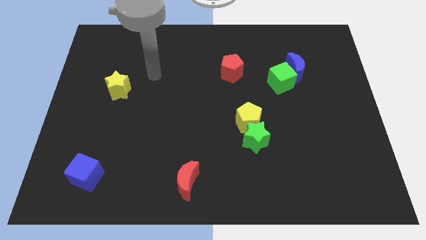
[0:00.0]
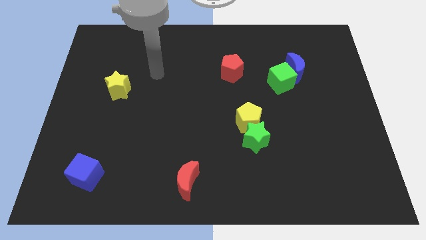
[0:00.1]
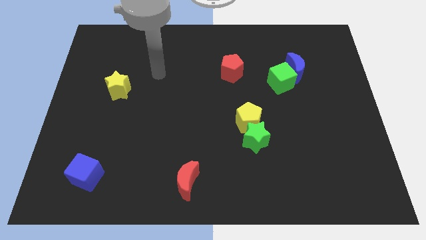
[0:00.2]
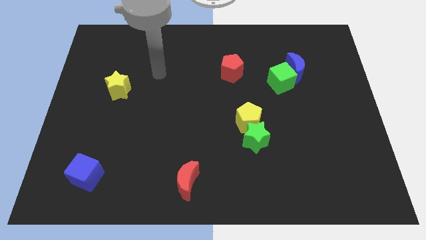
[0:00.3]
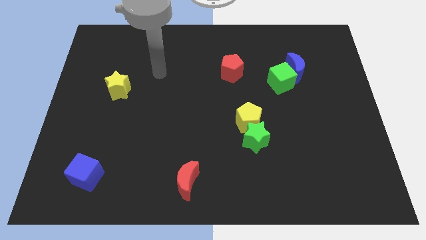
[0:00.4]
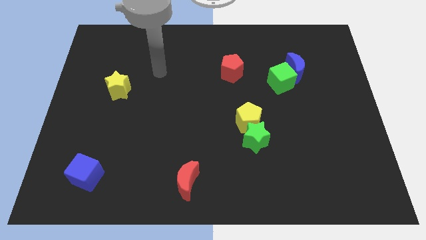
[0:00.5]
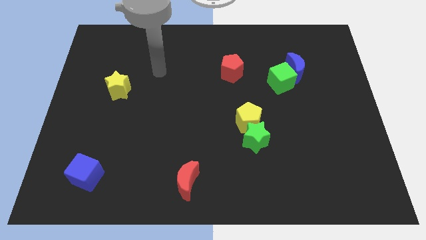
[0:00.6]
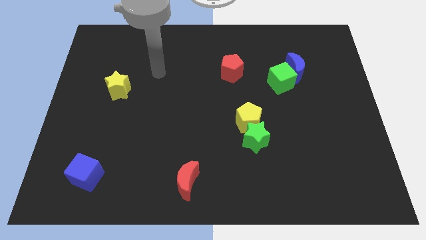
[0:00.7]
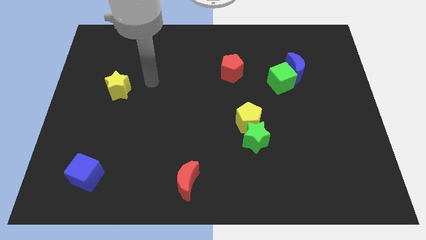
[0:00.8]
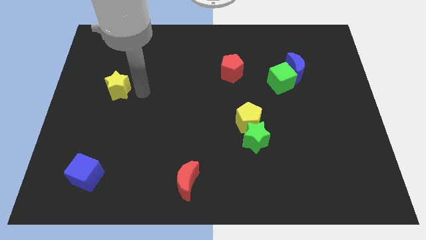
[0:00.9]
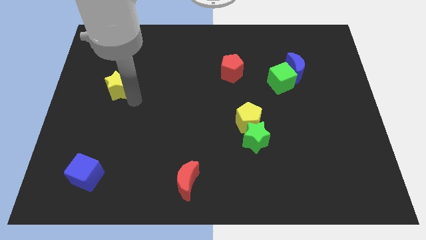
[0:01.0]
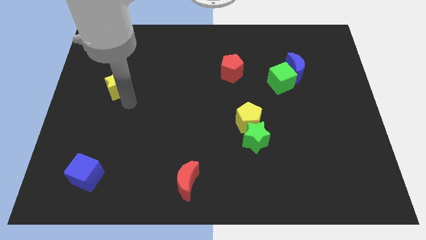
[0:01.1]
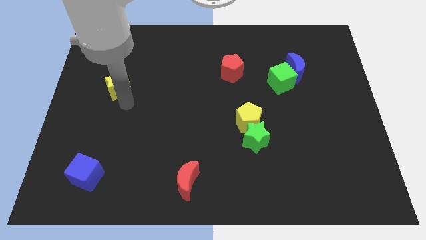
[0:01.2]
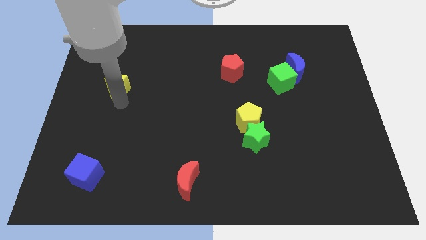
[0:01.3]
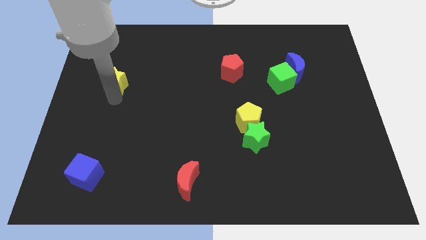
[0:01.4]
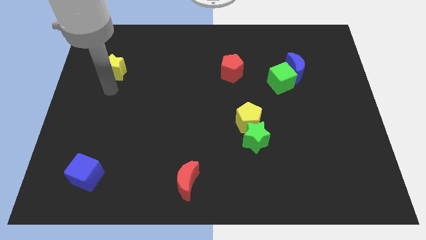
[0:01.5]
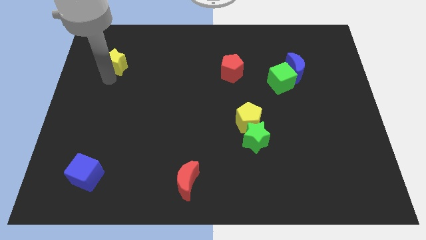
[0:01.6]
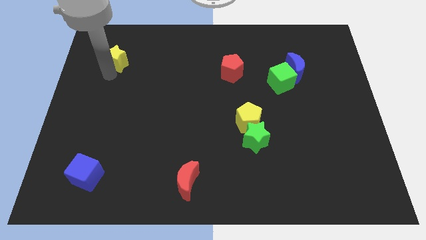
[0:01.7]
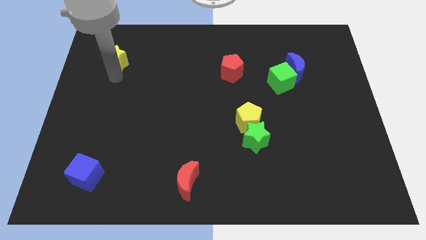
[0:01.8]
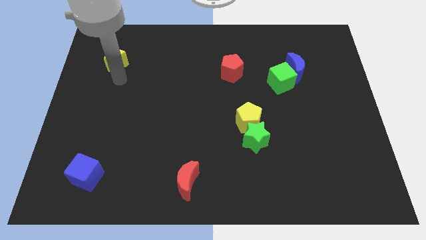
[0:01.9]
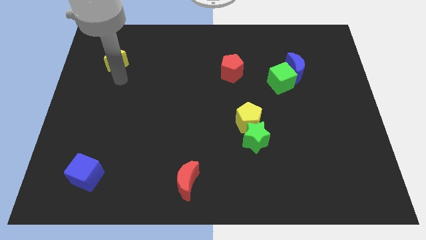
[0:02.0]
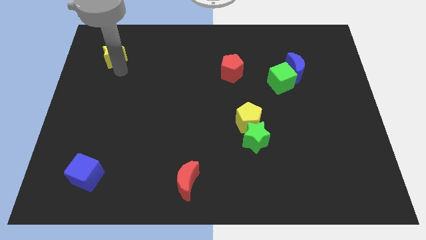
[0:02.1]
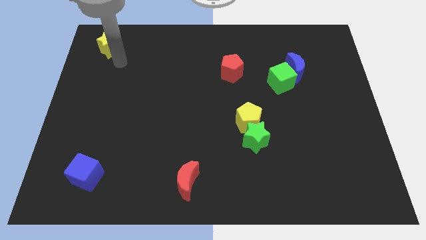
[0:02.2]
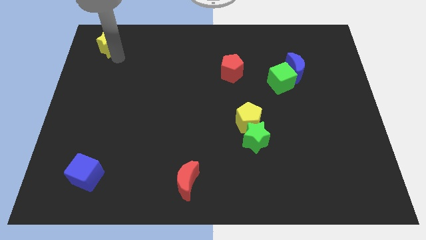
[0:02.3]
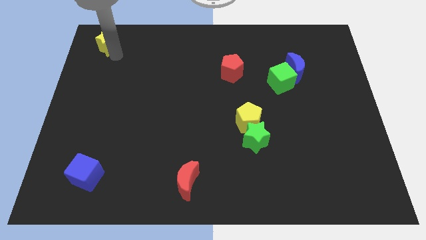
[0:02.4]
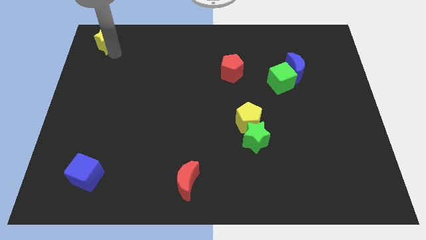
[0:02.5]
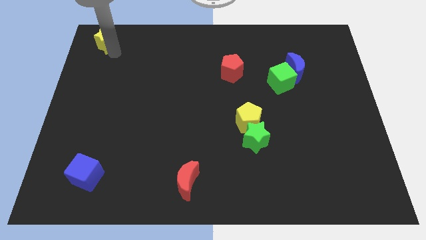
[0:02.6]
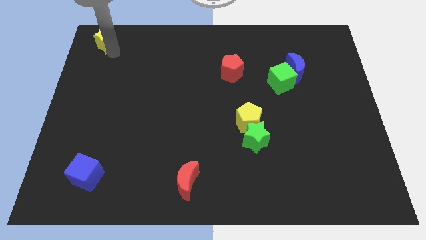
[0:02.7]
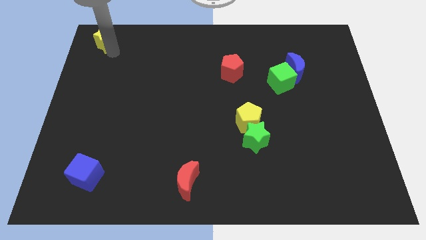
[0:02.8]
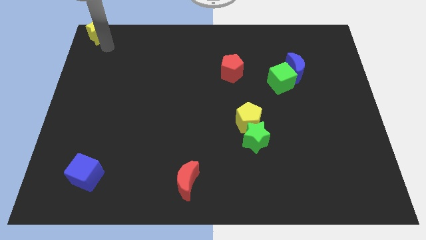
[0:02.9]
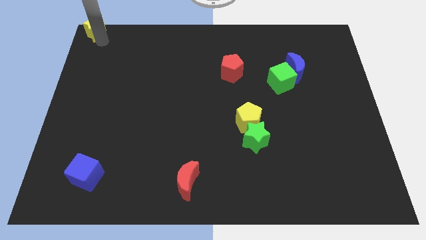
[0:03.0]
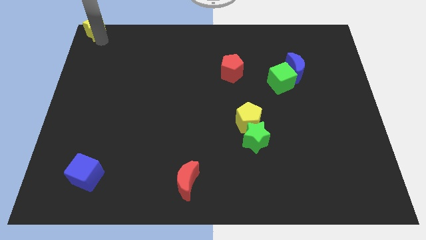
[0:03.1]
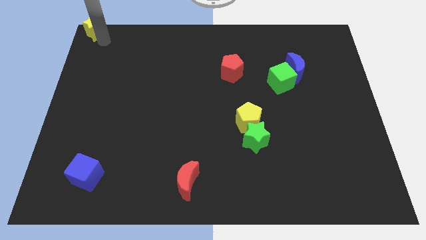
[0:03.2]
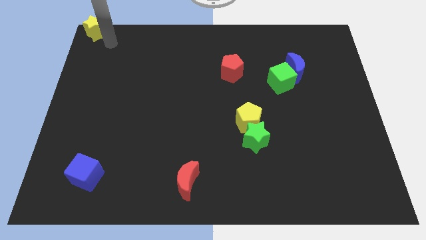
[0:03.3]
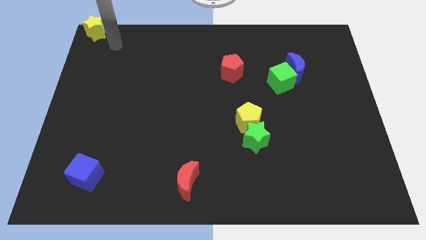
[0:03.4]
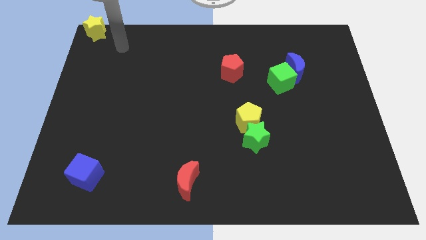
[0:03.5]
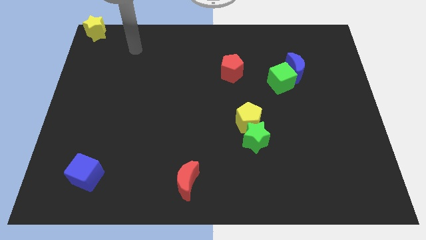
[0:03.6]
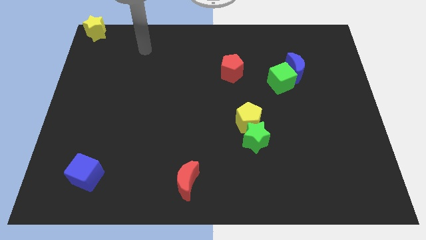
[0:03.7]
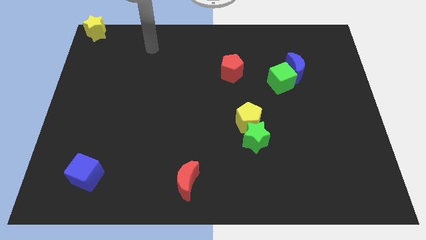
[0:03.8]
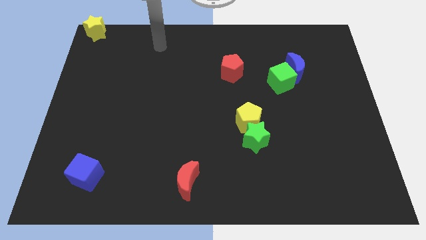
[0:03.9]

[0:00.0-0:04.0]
push the yellow star to the top left corner of the board

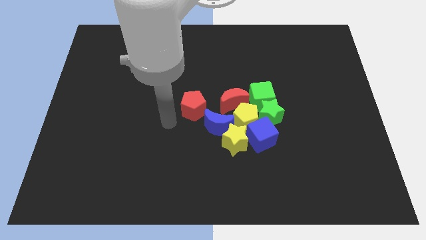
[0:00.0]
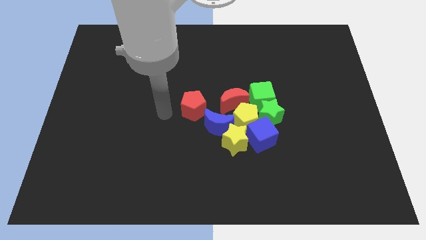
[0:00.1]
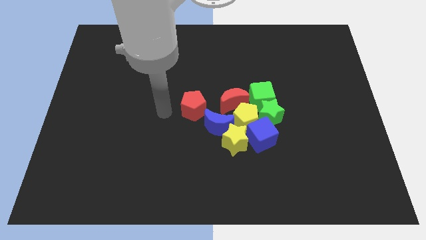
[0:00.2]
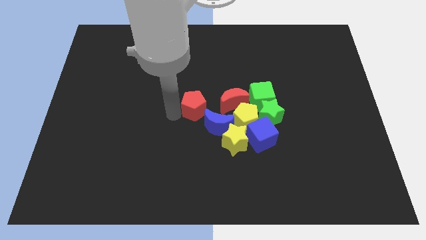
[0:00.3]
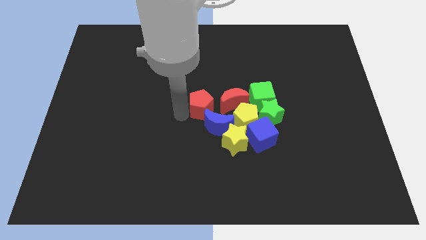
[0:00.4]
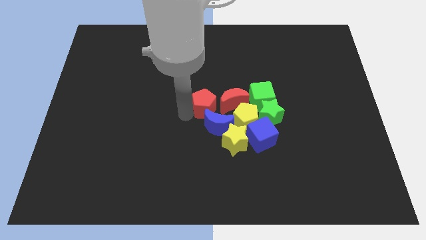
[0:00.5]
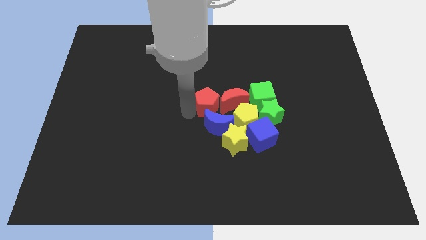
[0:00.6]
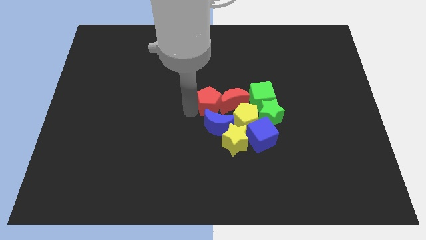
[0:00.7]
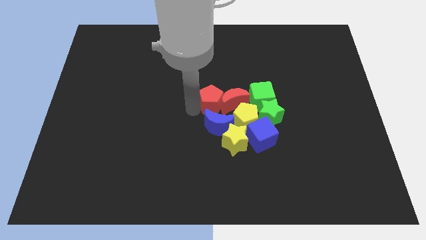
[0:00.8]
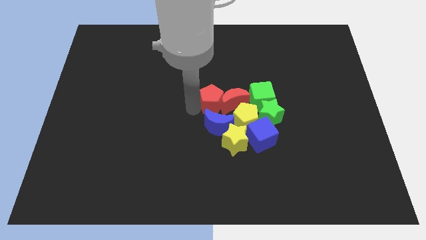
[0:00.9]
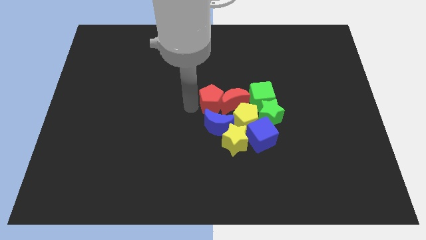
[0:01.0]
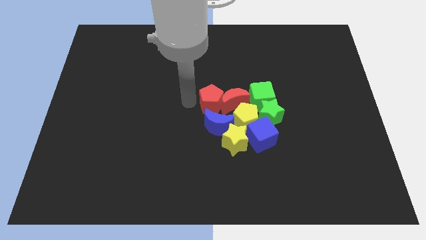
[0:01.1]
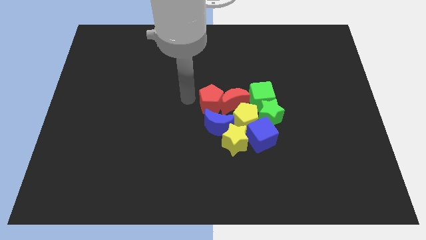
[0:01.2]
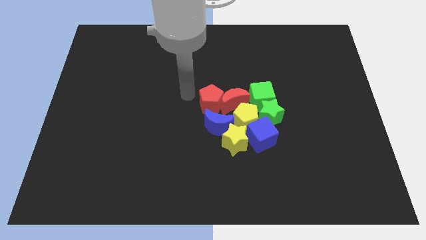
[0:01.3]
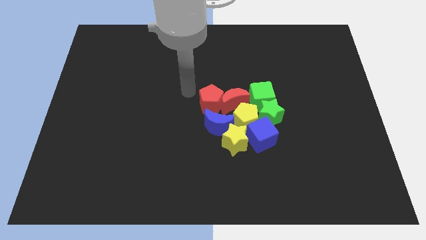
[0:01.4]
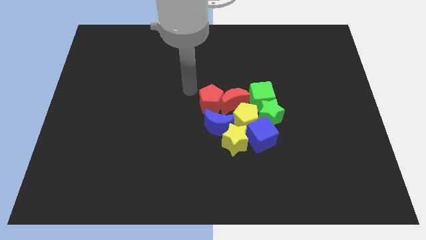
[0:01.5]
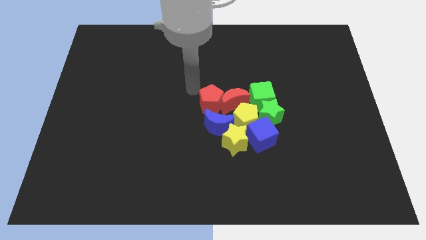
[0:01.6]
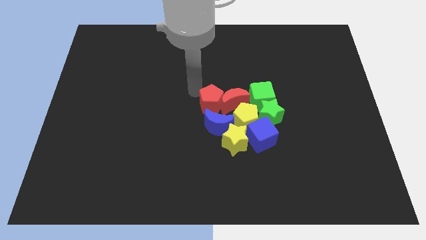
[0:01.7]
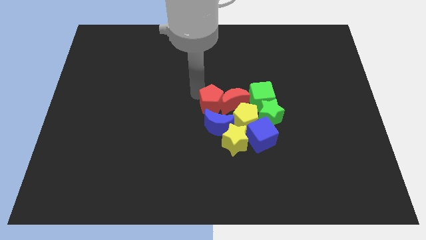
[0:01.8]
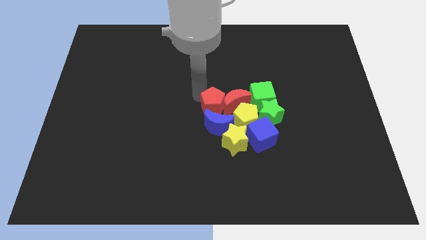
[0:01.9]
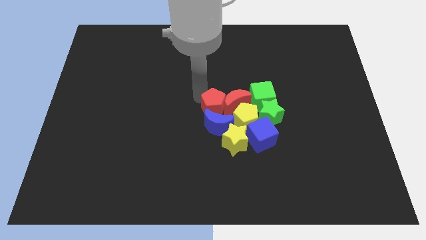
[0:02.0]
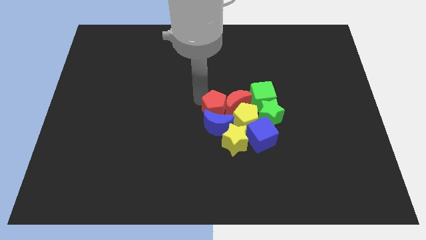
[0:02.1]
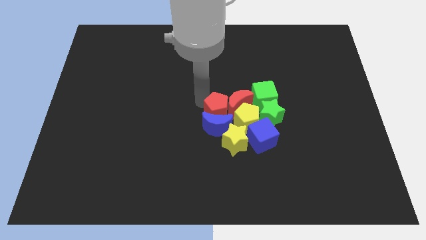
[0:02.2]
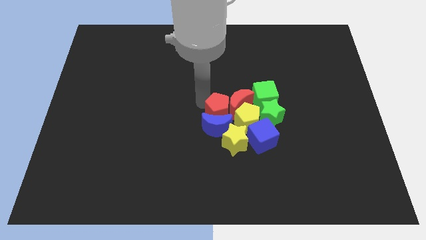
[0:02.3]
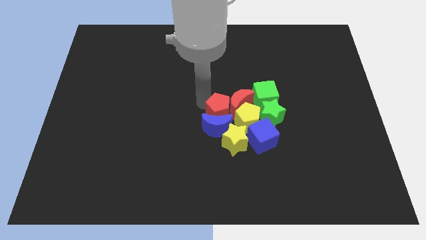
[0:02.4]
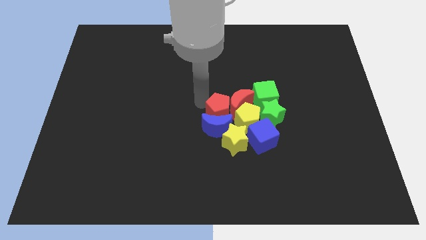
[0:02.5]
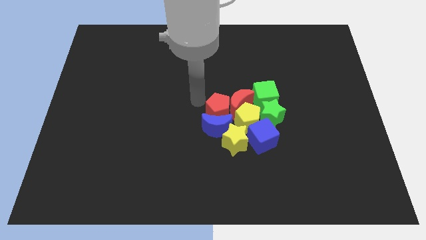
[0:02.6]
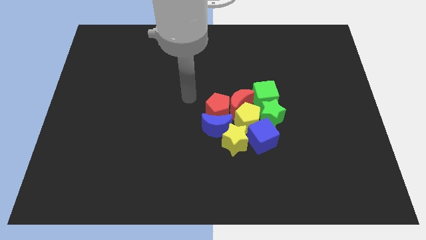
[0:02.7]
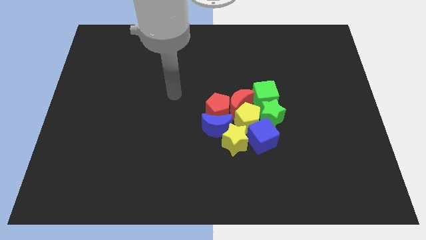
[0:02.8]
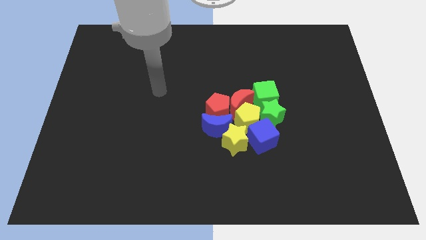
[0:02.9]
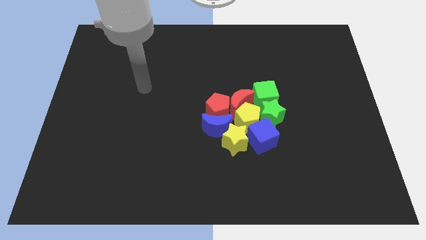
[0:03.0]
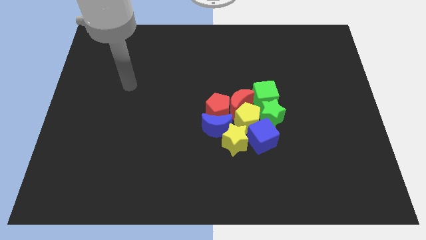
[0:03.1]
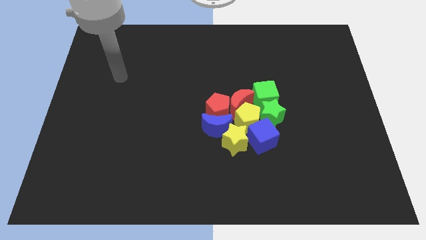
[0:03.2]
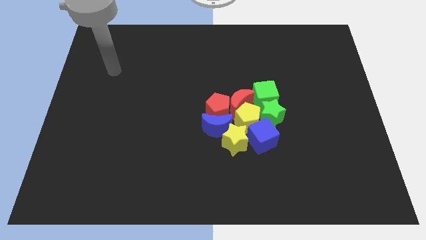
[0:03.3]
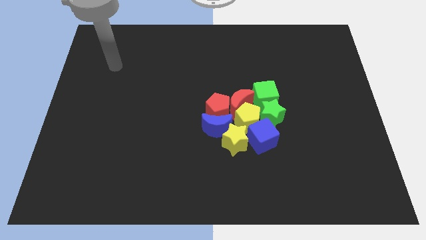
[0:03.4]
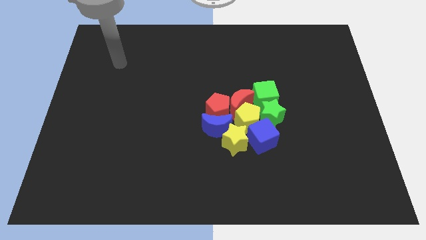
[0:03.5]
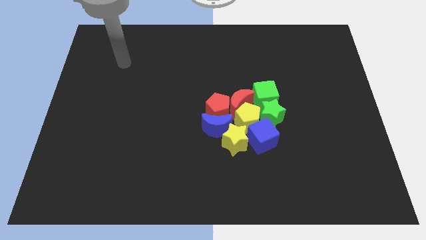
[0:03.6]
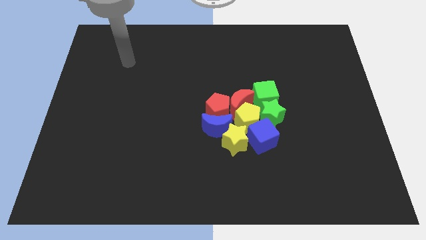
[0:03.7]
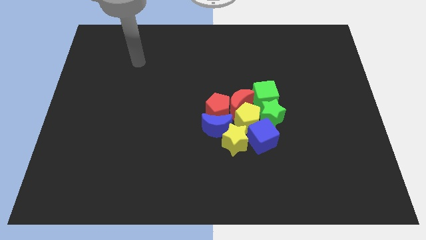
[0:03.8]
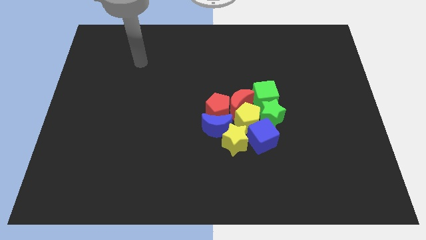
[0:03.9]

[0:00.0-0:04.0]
move the red pentagon into the group of blocks

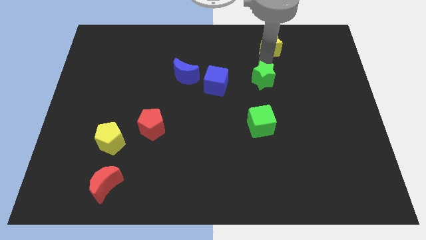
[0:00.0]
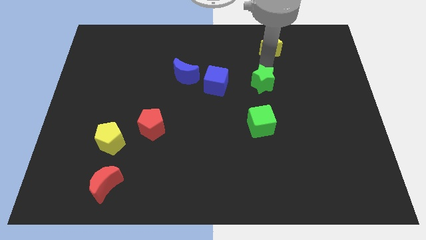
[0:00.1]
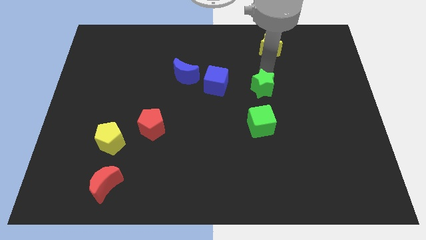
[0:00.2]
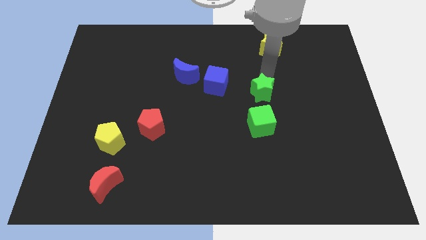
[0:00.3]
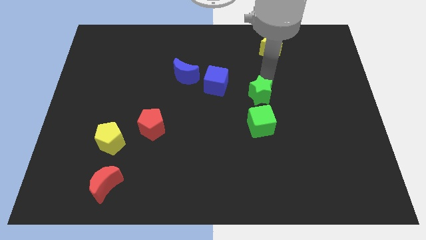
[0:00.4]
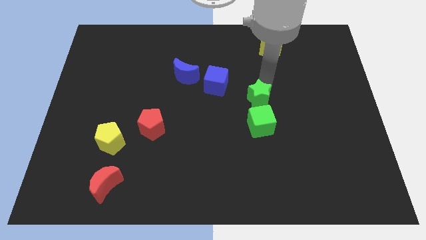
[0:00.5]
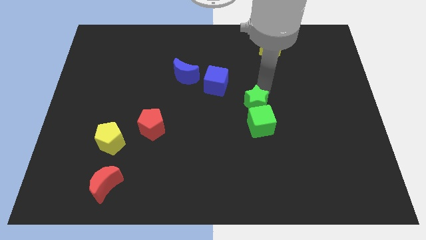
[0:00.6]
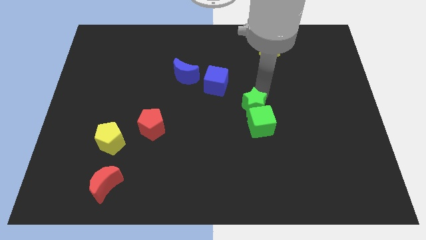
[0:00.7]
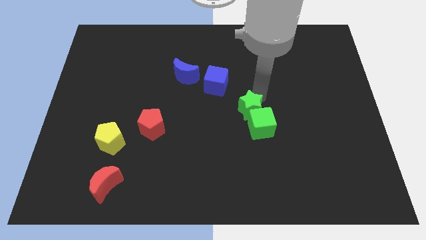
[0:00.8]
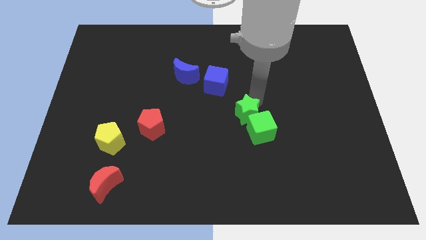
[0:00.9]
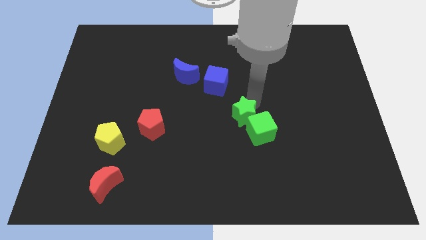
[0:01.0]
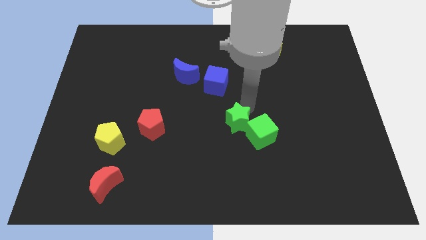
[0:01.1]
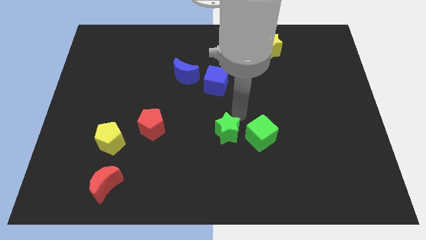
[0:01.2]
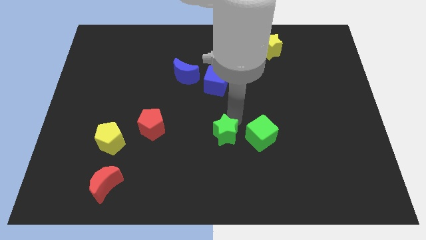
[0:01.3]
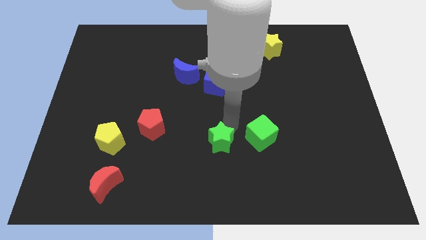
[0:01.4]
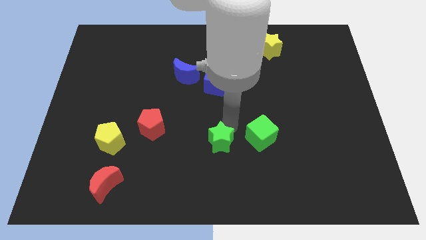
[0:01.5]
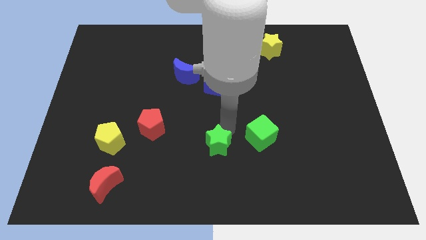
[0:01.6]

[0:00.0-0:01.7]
push the green star to the left of the green cube
